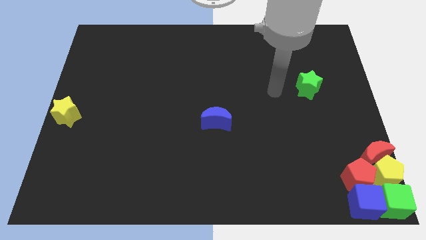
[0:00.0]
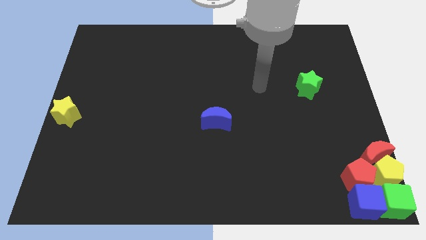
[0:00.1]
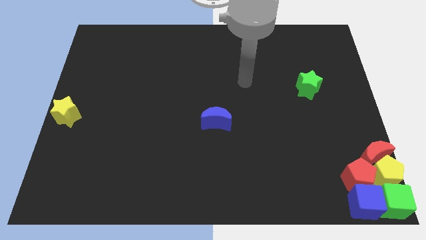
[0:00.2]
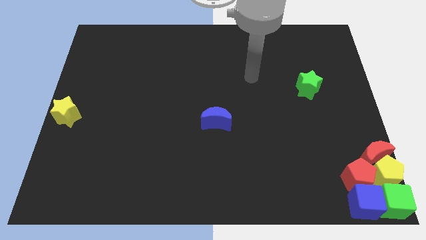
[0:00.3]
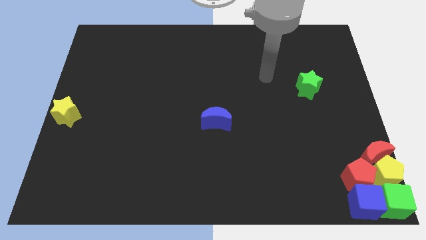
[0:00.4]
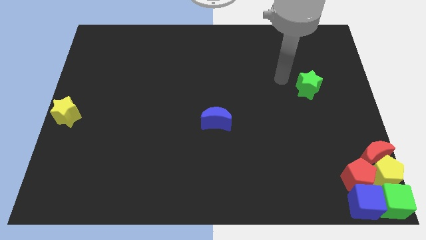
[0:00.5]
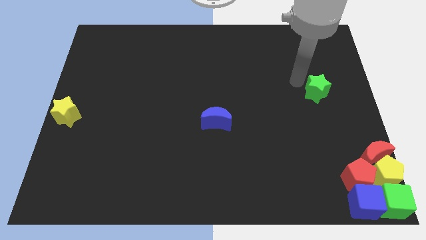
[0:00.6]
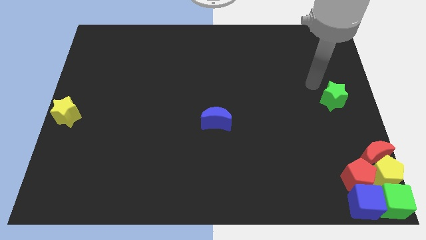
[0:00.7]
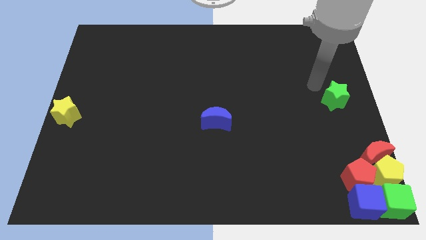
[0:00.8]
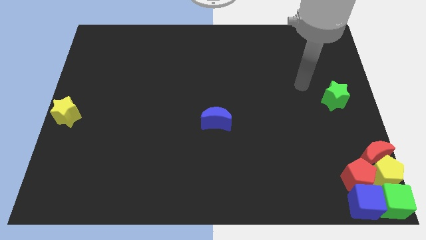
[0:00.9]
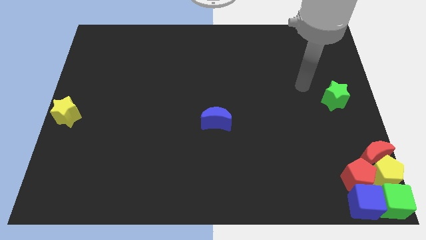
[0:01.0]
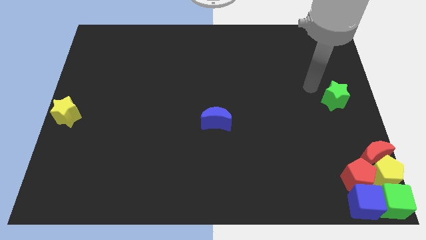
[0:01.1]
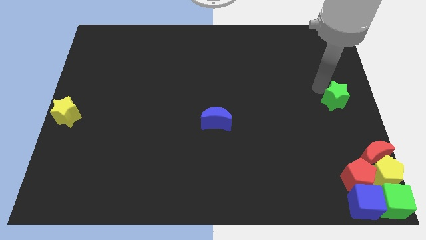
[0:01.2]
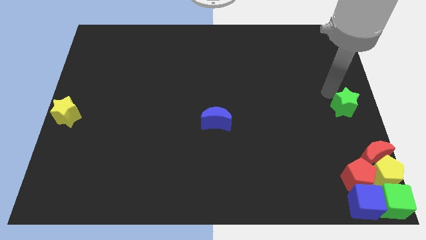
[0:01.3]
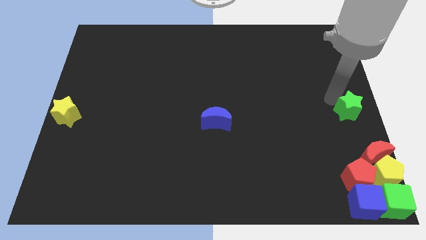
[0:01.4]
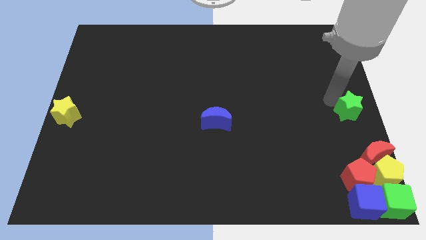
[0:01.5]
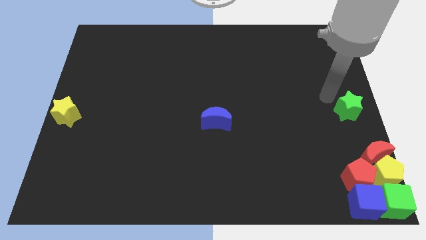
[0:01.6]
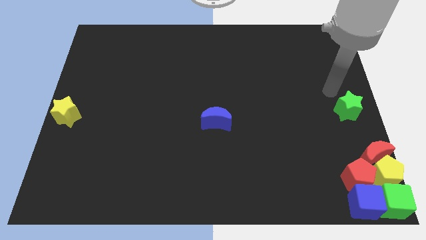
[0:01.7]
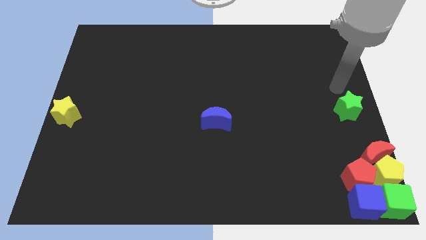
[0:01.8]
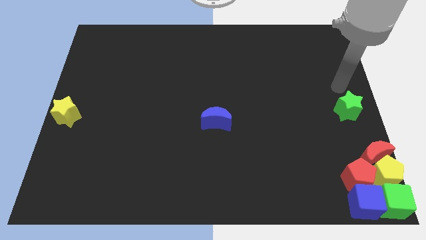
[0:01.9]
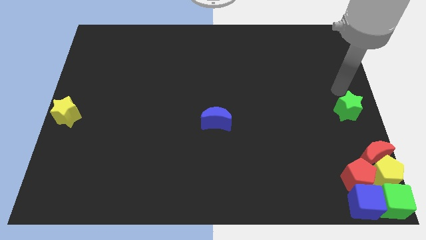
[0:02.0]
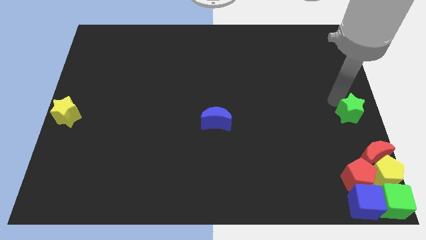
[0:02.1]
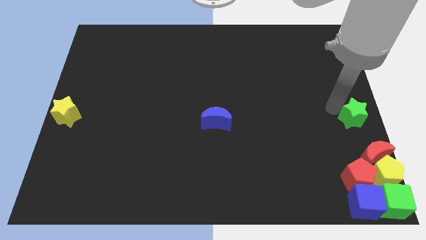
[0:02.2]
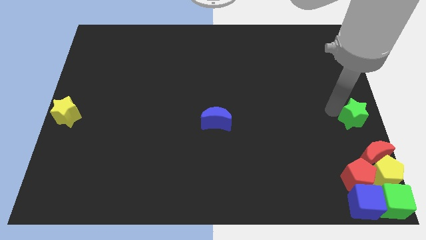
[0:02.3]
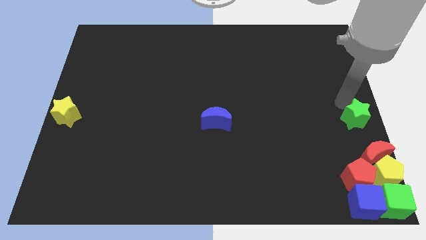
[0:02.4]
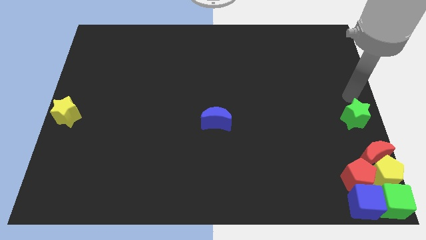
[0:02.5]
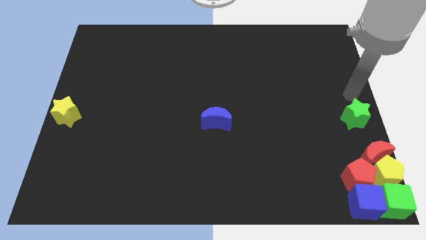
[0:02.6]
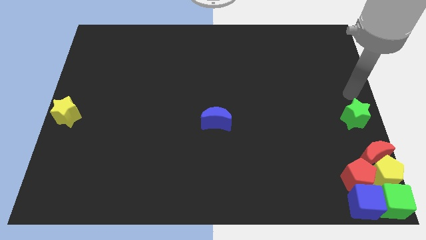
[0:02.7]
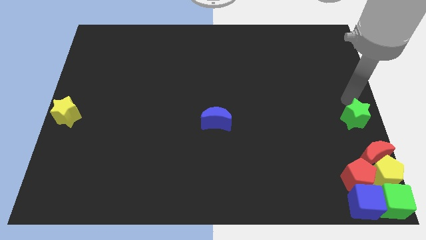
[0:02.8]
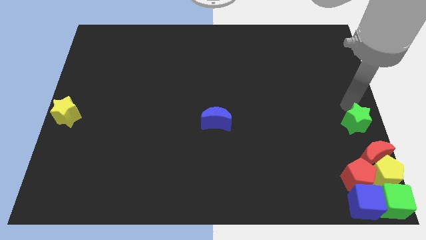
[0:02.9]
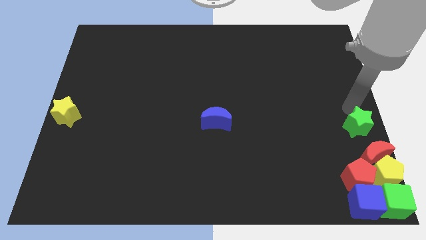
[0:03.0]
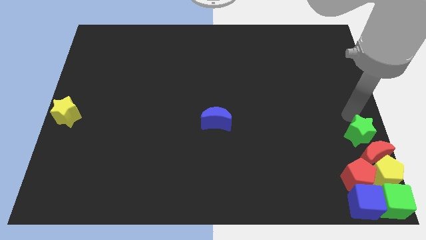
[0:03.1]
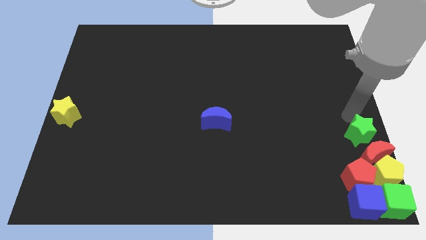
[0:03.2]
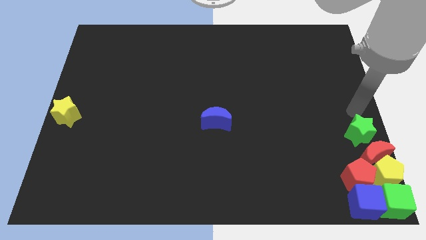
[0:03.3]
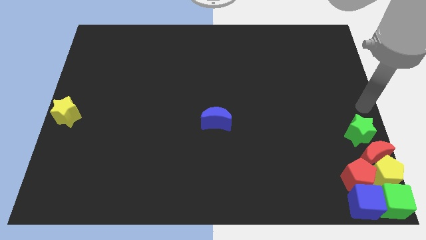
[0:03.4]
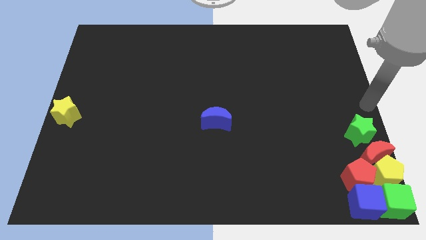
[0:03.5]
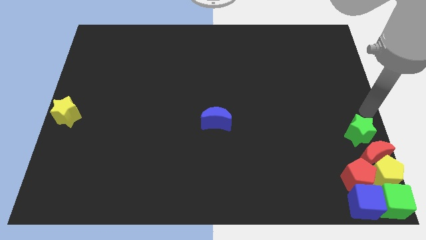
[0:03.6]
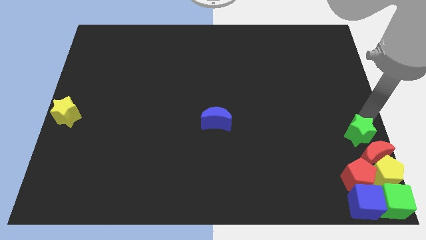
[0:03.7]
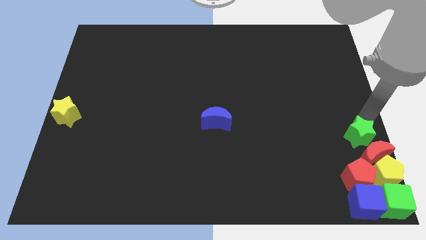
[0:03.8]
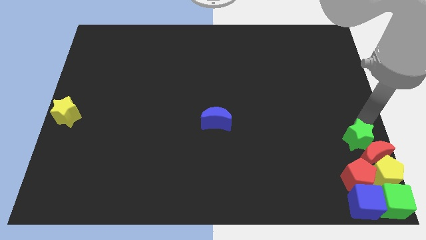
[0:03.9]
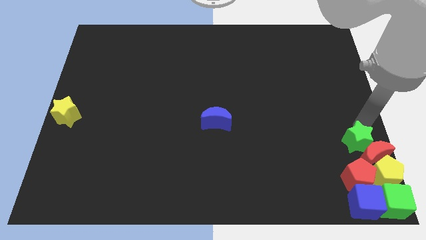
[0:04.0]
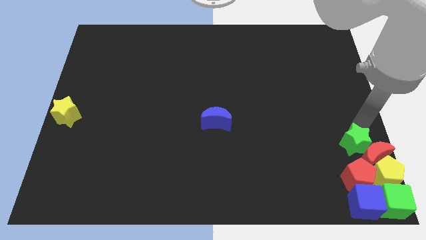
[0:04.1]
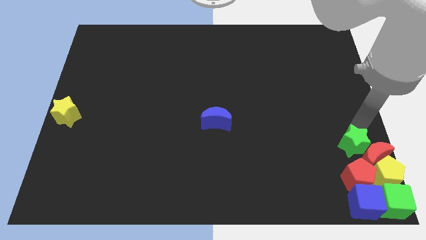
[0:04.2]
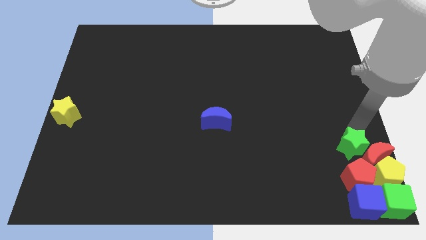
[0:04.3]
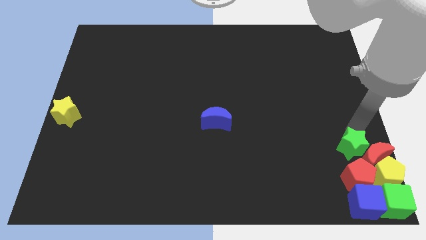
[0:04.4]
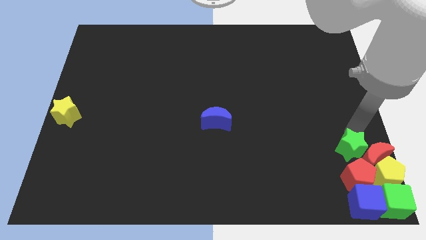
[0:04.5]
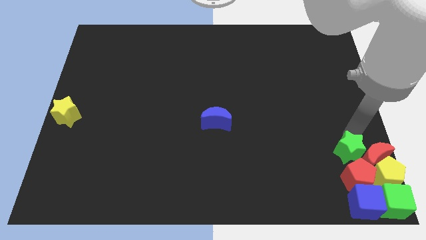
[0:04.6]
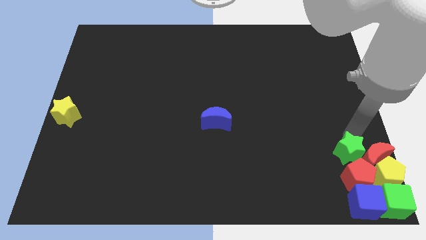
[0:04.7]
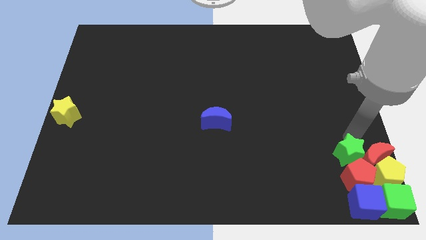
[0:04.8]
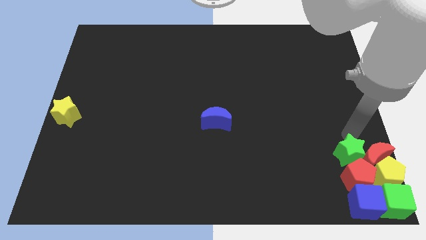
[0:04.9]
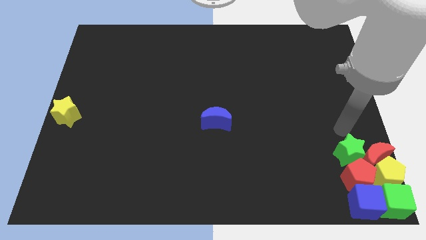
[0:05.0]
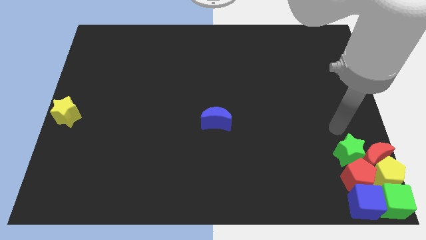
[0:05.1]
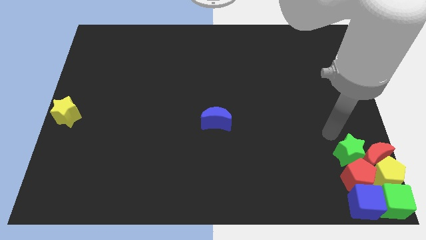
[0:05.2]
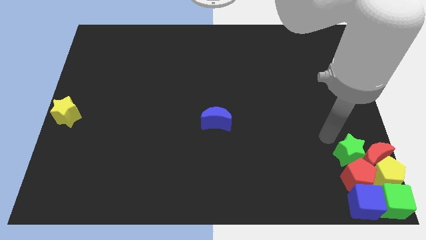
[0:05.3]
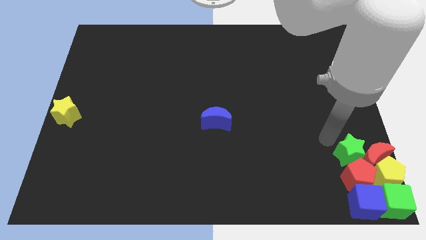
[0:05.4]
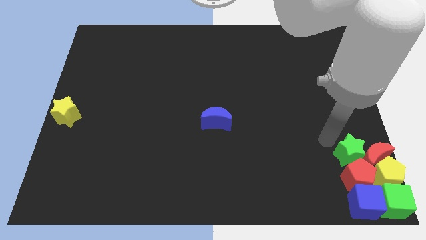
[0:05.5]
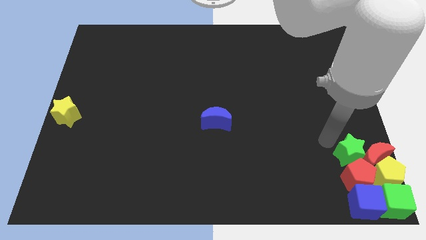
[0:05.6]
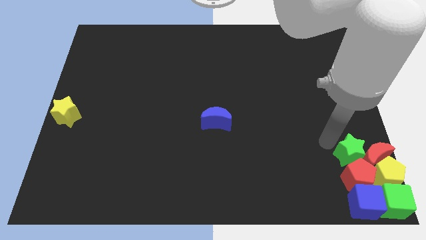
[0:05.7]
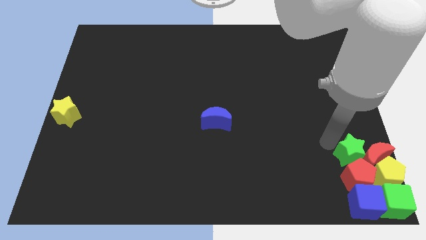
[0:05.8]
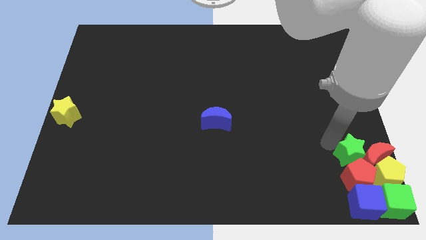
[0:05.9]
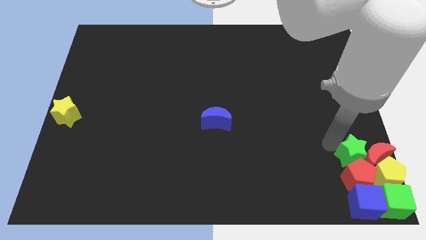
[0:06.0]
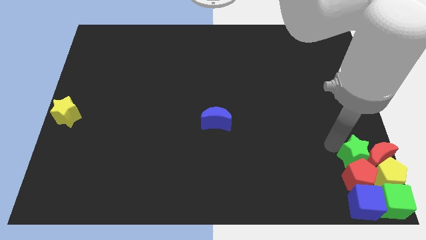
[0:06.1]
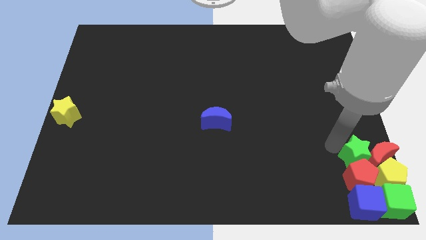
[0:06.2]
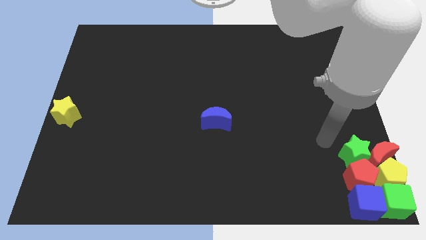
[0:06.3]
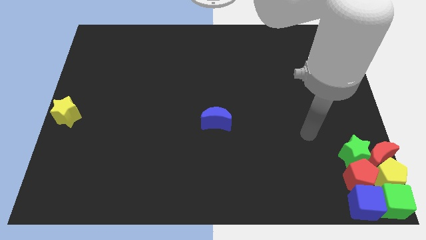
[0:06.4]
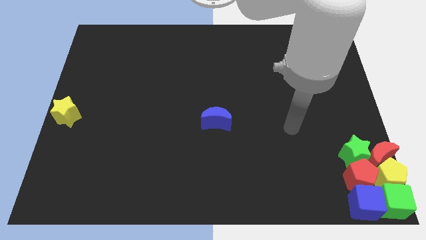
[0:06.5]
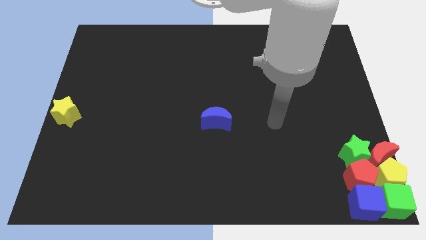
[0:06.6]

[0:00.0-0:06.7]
push the green block towards other blocks

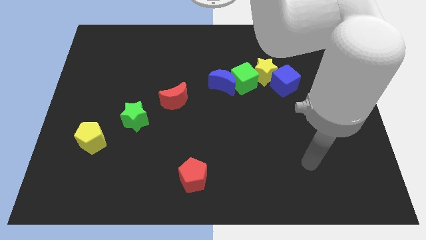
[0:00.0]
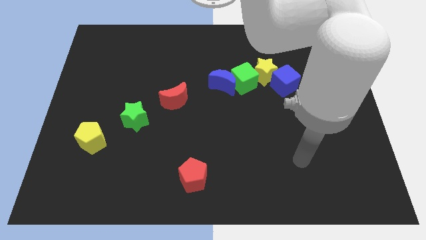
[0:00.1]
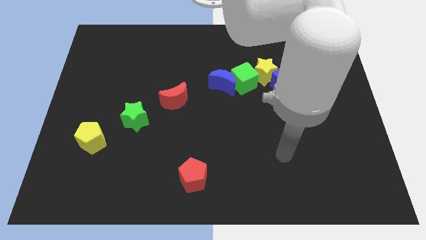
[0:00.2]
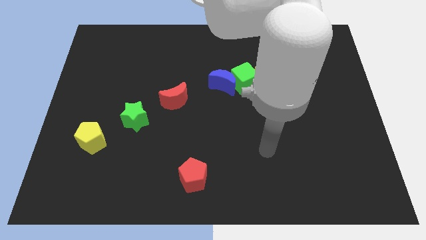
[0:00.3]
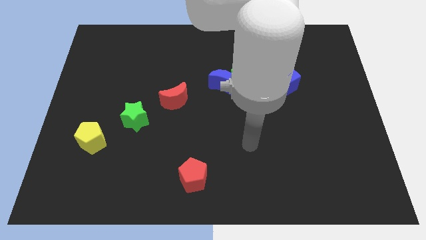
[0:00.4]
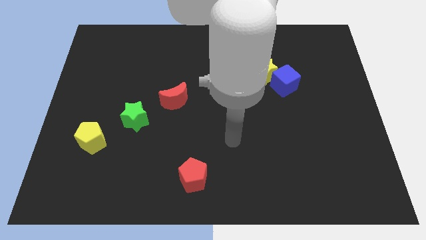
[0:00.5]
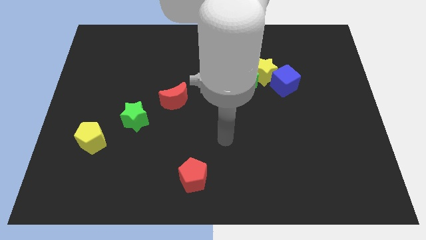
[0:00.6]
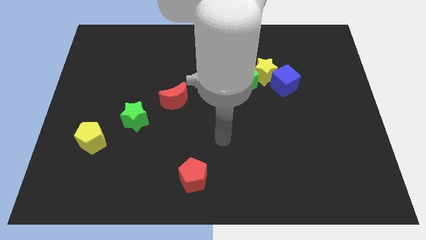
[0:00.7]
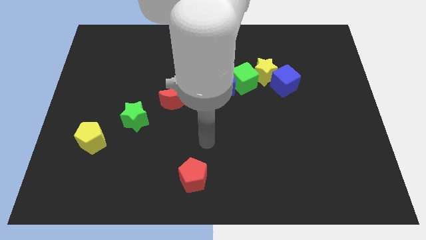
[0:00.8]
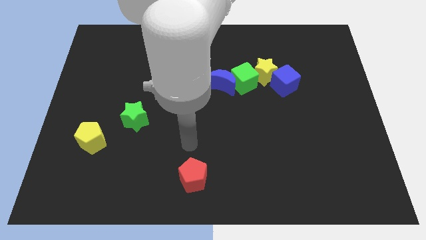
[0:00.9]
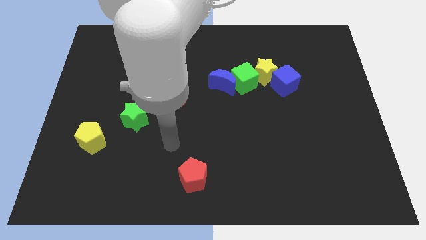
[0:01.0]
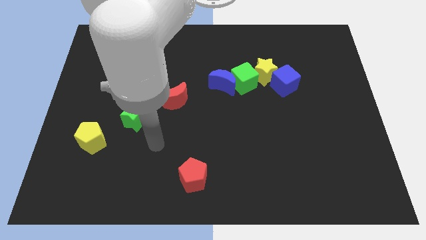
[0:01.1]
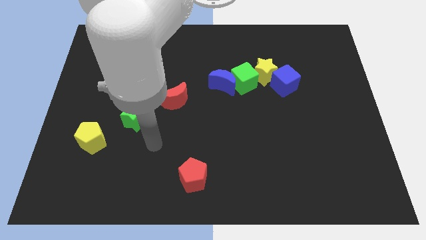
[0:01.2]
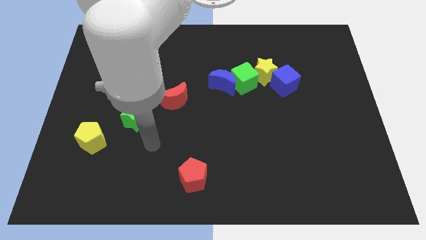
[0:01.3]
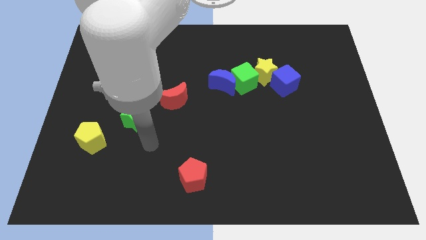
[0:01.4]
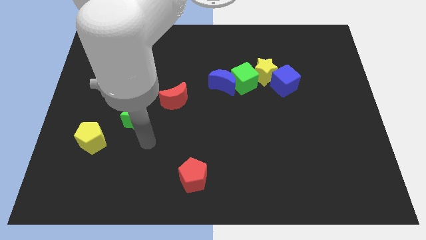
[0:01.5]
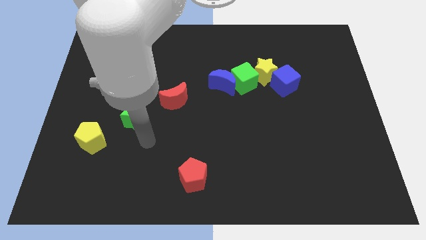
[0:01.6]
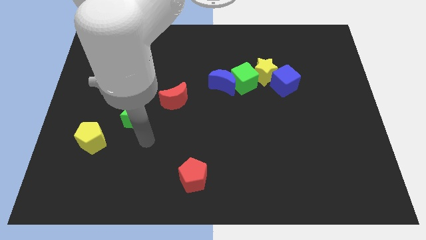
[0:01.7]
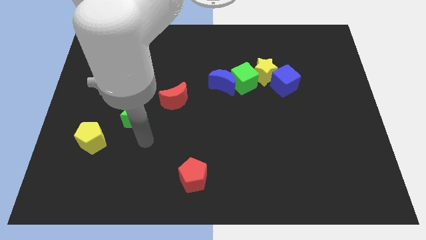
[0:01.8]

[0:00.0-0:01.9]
move your arm to the bottom of green star

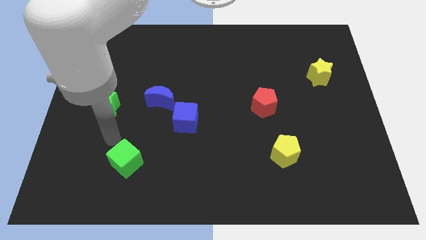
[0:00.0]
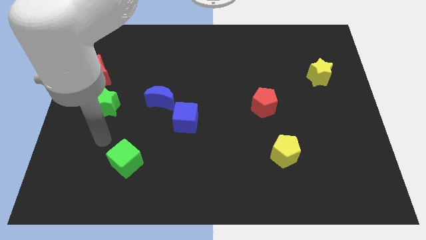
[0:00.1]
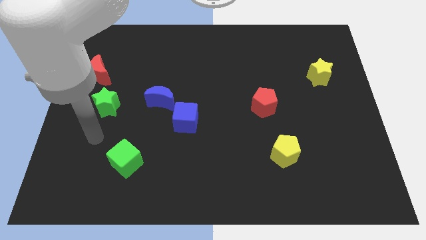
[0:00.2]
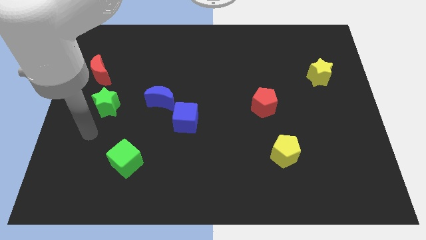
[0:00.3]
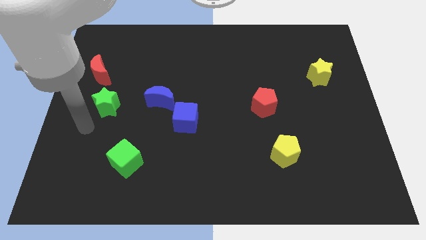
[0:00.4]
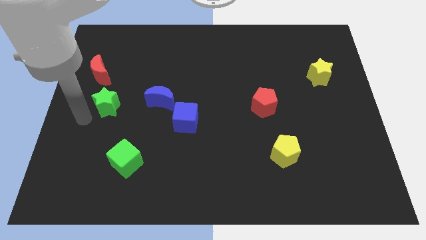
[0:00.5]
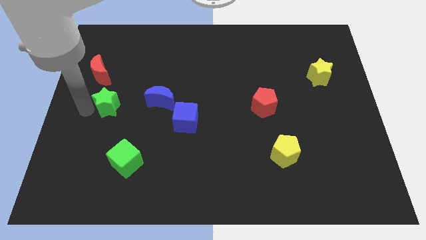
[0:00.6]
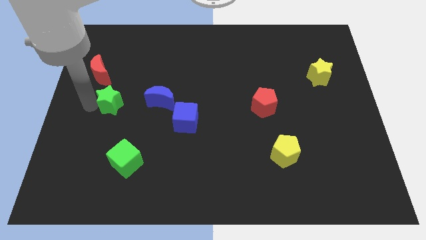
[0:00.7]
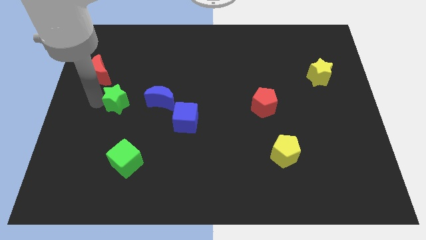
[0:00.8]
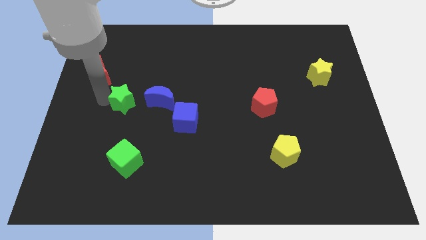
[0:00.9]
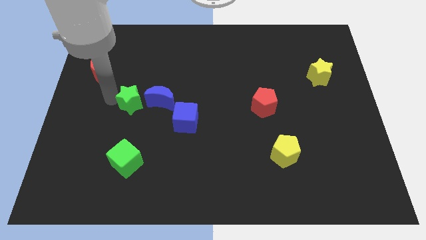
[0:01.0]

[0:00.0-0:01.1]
move green star left beside the blue moon
